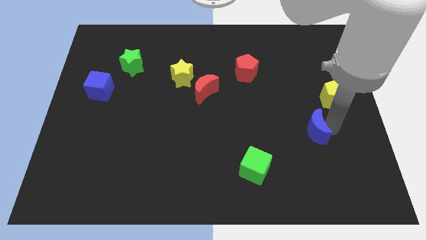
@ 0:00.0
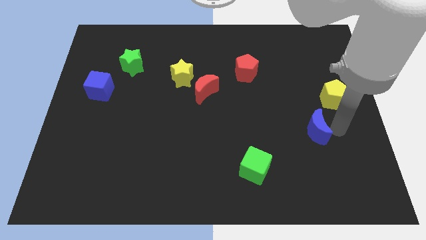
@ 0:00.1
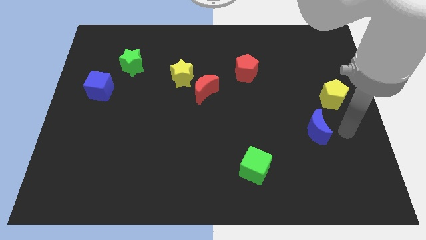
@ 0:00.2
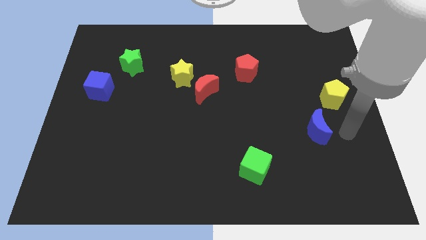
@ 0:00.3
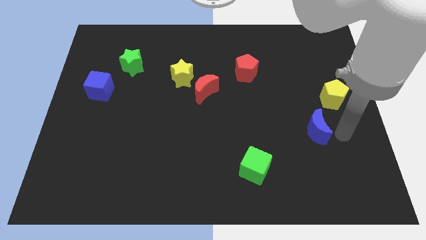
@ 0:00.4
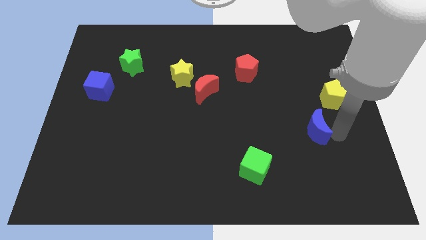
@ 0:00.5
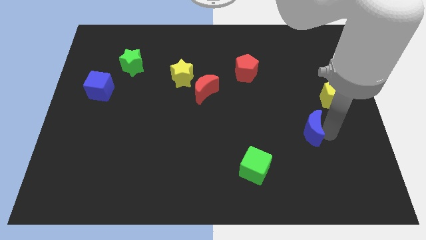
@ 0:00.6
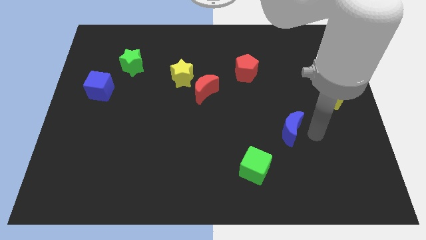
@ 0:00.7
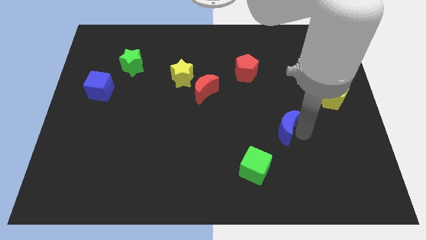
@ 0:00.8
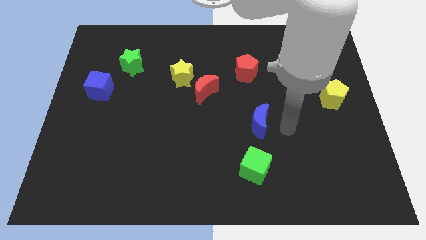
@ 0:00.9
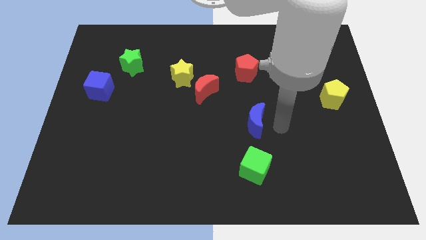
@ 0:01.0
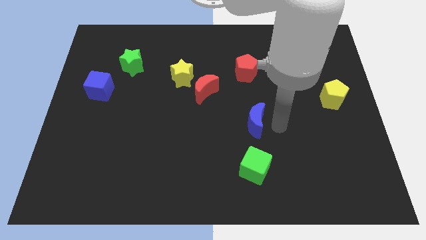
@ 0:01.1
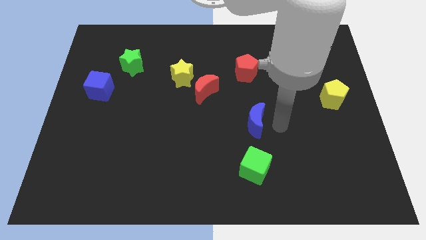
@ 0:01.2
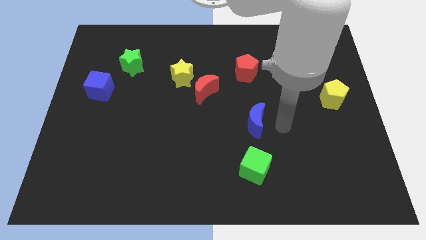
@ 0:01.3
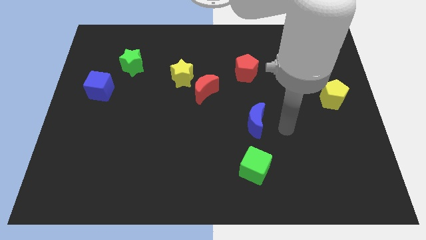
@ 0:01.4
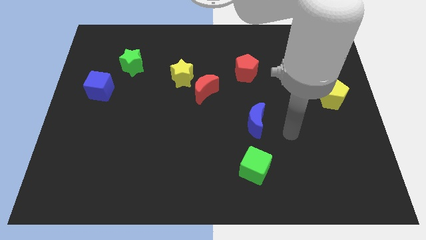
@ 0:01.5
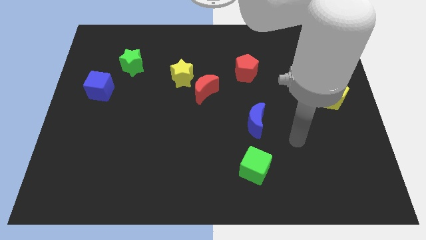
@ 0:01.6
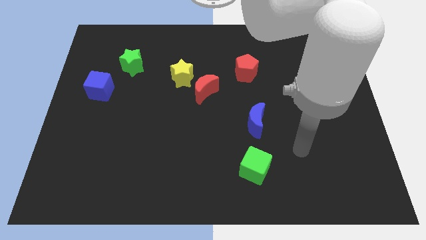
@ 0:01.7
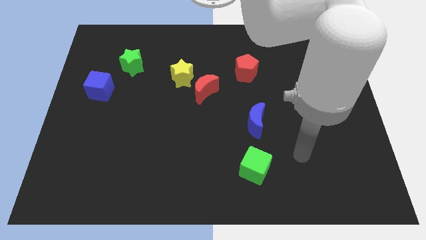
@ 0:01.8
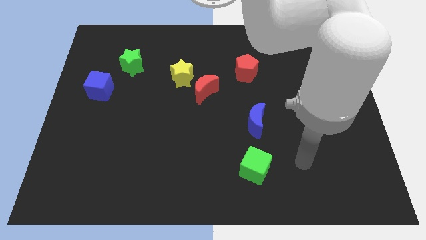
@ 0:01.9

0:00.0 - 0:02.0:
place blue moon to the top of green cube

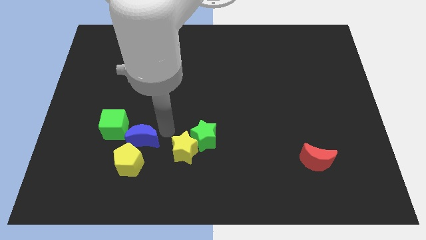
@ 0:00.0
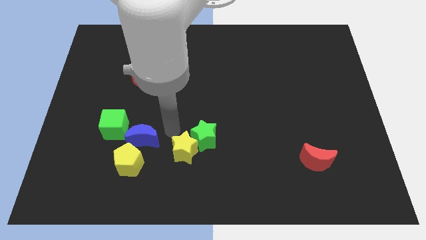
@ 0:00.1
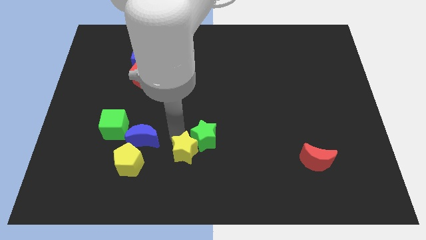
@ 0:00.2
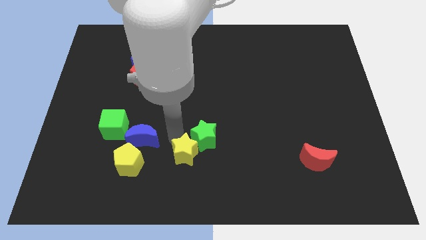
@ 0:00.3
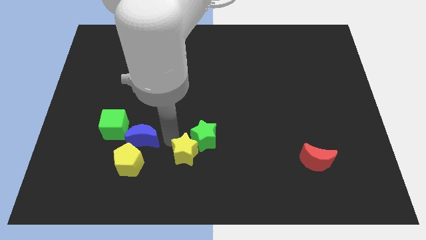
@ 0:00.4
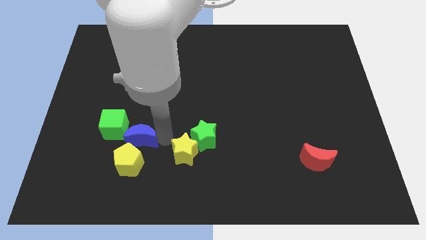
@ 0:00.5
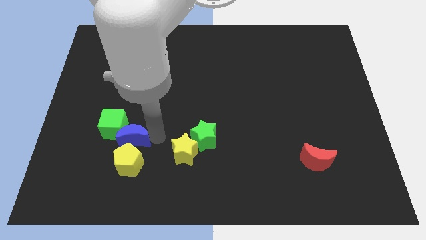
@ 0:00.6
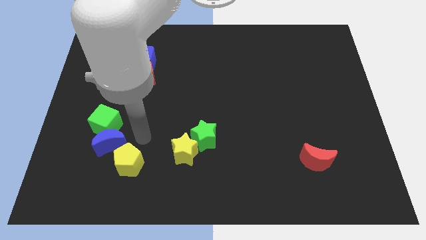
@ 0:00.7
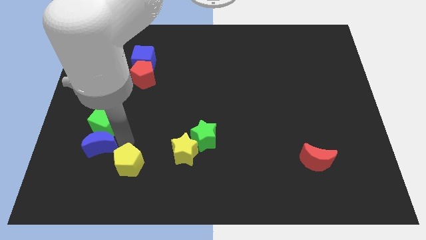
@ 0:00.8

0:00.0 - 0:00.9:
put blue moon below green cube

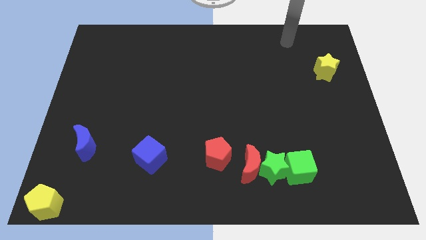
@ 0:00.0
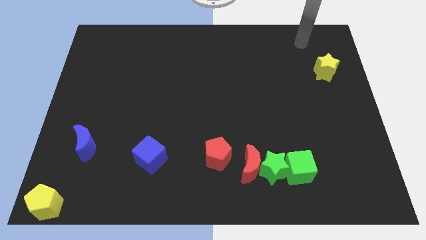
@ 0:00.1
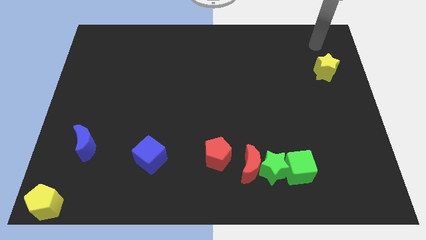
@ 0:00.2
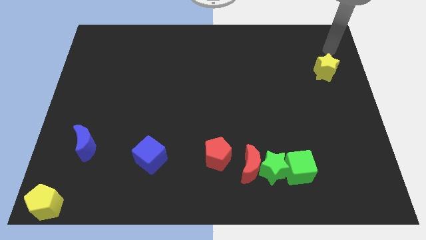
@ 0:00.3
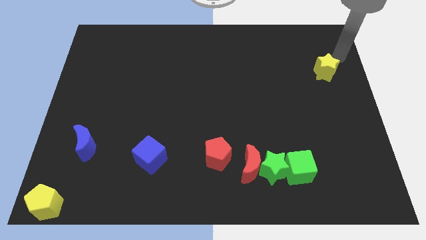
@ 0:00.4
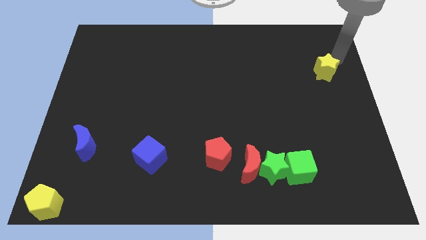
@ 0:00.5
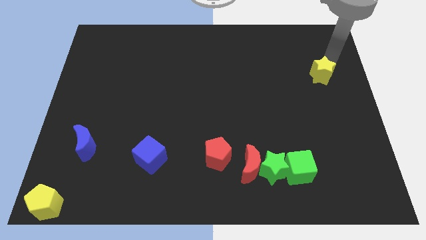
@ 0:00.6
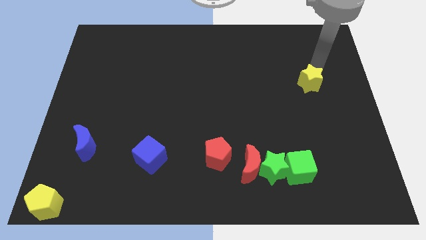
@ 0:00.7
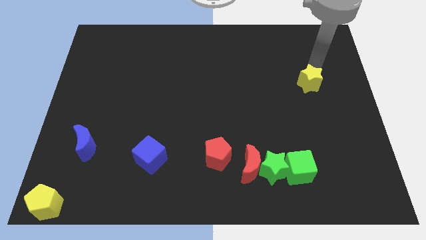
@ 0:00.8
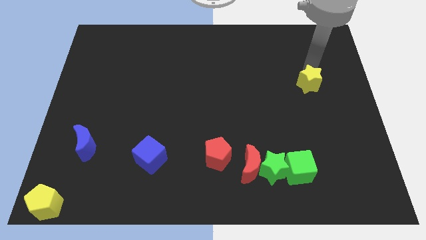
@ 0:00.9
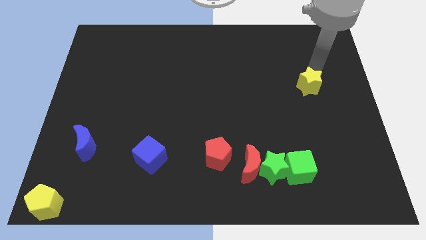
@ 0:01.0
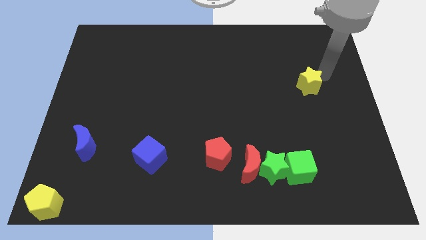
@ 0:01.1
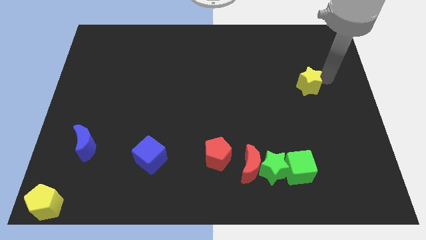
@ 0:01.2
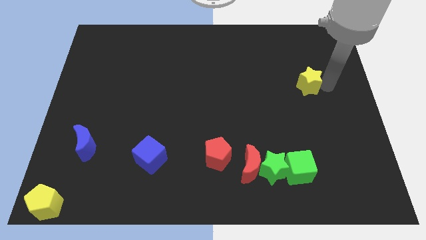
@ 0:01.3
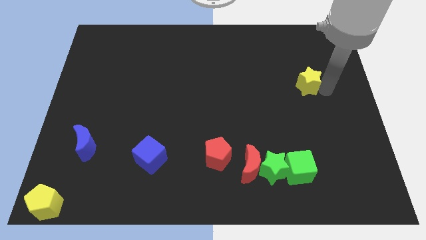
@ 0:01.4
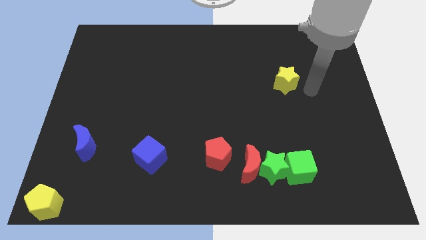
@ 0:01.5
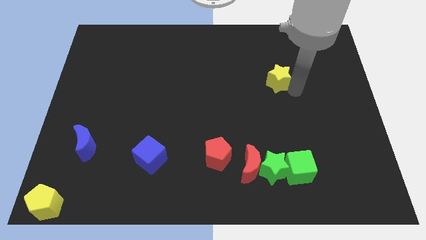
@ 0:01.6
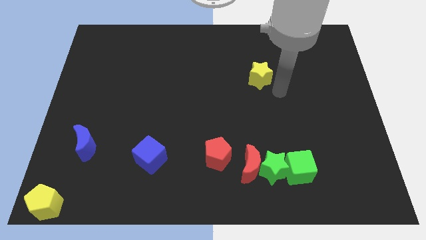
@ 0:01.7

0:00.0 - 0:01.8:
place the yellow star above green star

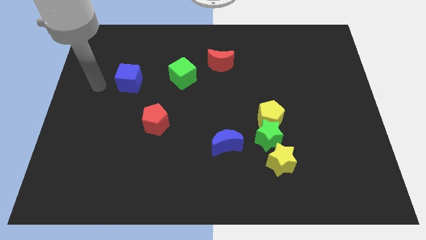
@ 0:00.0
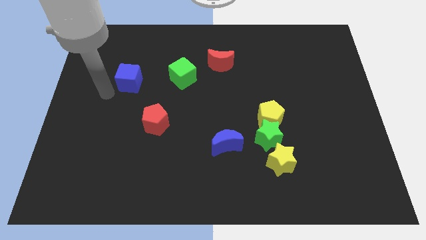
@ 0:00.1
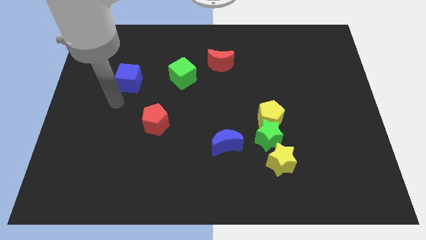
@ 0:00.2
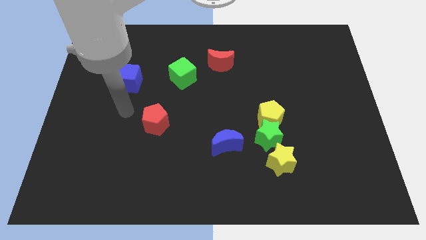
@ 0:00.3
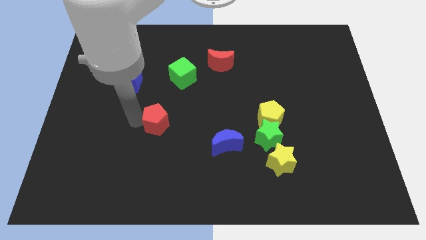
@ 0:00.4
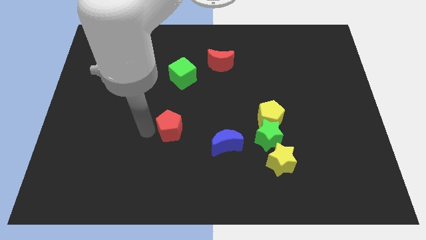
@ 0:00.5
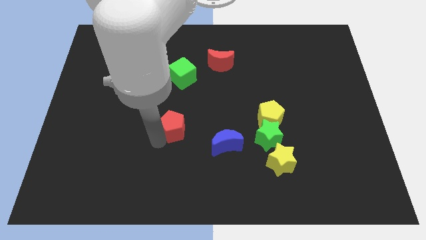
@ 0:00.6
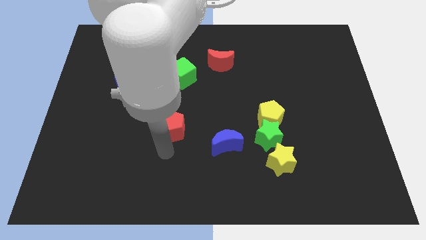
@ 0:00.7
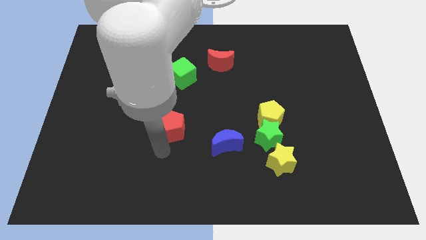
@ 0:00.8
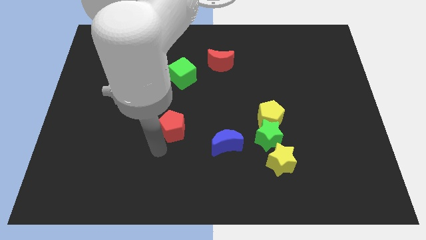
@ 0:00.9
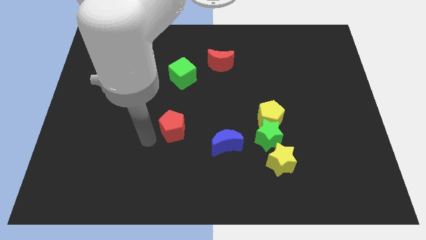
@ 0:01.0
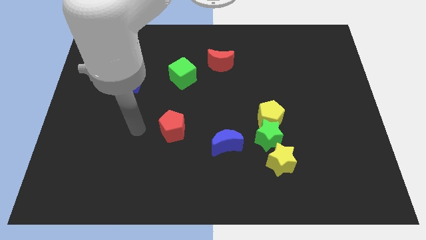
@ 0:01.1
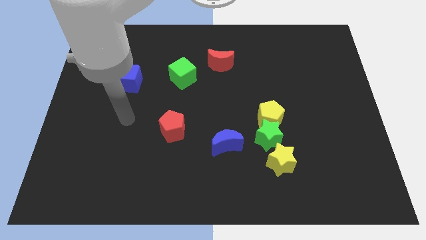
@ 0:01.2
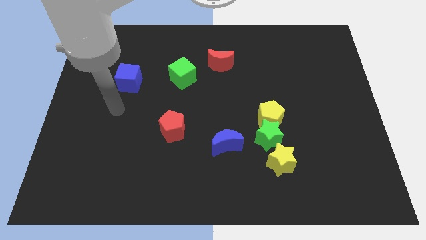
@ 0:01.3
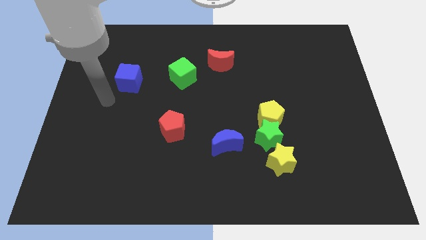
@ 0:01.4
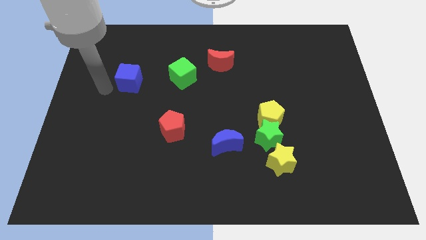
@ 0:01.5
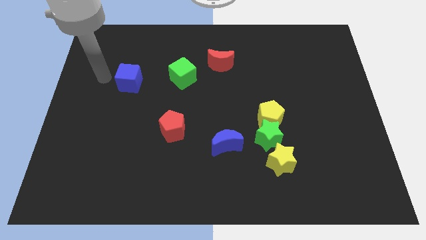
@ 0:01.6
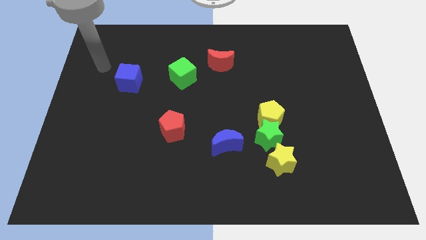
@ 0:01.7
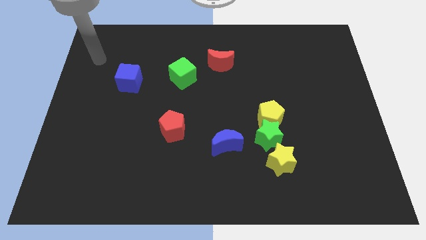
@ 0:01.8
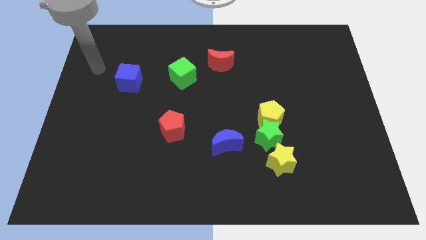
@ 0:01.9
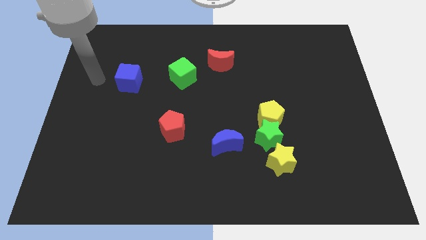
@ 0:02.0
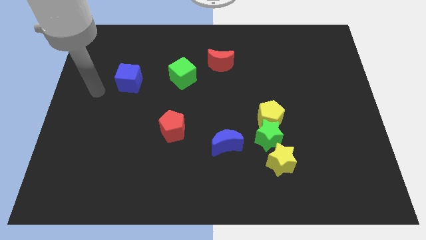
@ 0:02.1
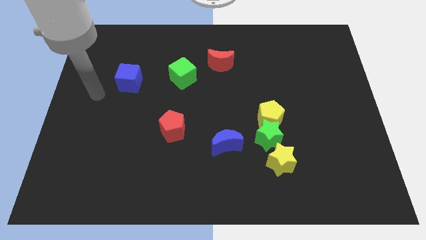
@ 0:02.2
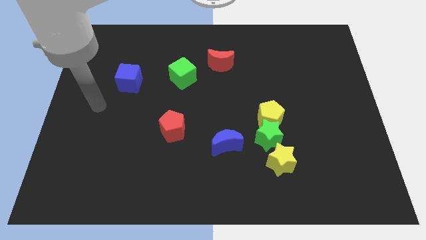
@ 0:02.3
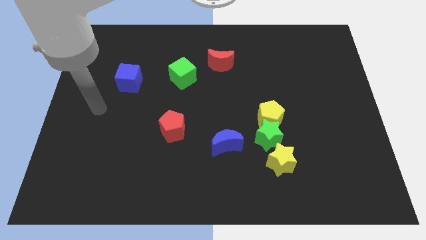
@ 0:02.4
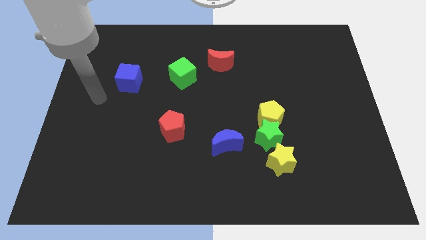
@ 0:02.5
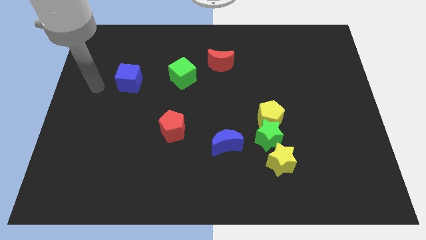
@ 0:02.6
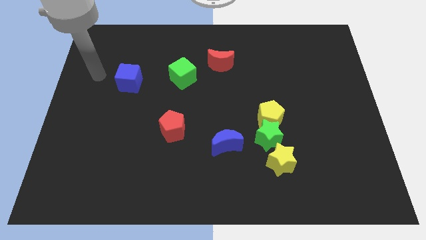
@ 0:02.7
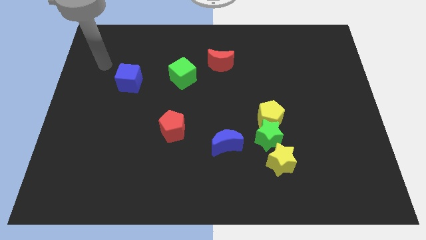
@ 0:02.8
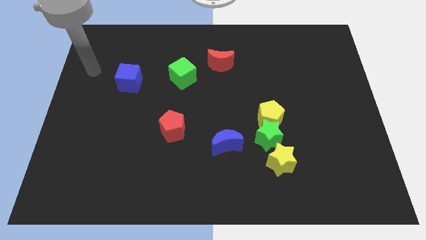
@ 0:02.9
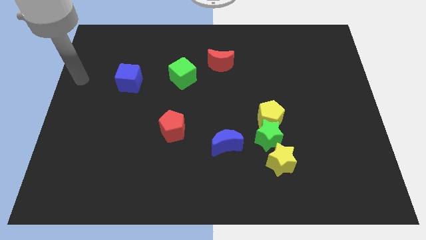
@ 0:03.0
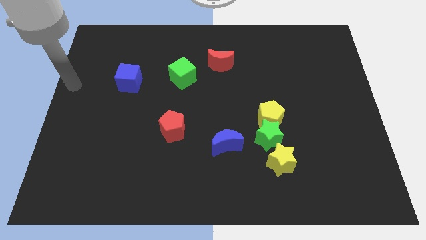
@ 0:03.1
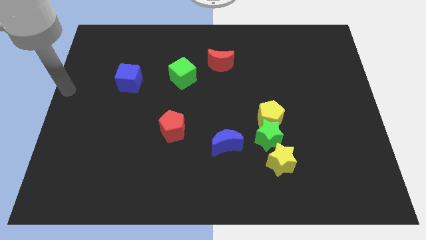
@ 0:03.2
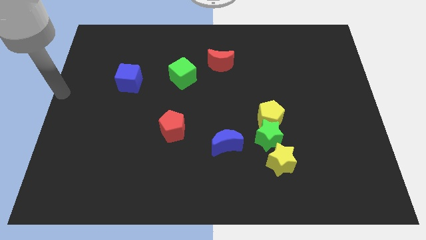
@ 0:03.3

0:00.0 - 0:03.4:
push the red pentagon towards the blue crescent

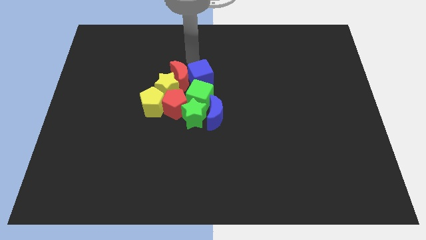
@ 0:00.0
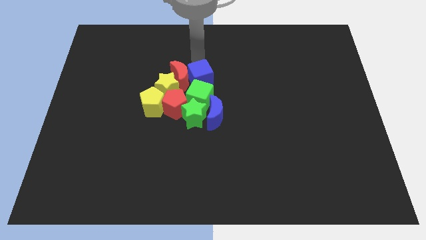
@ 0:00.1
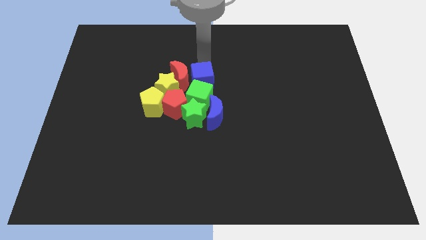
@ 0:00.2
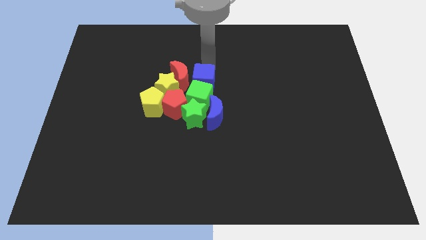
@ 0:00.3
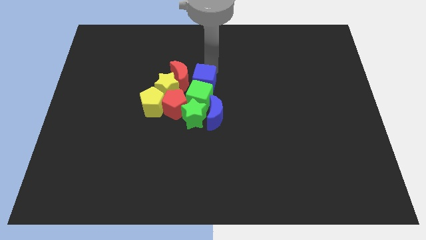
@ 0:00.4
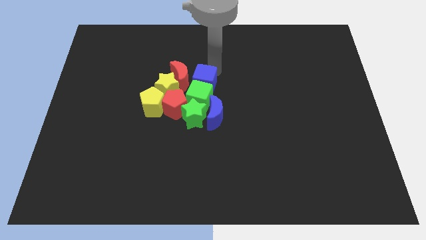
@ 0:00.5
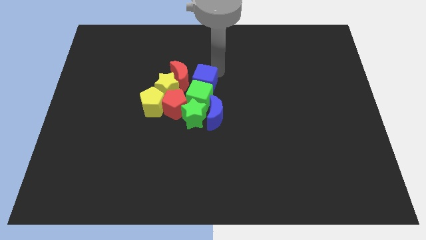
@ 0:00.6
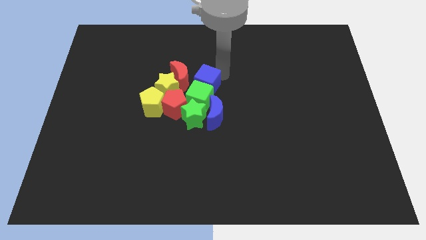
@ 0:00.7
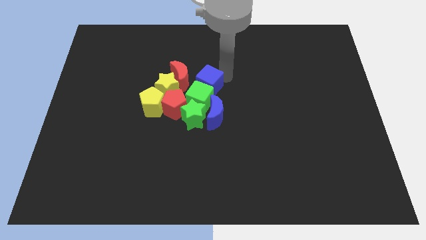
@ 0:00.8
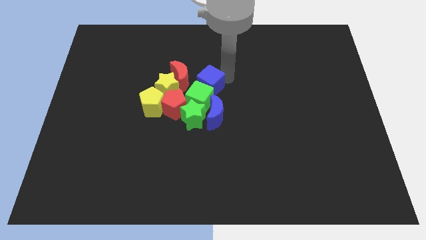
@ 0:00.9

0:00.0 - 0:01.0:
move the blue cube into the top of the green cube
